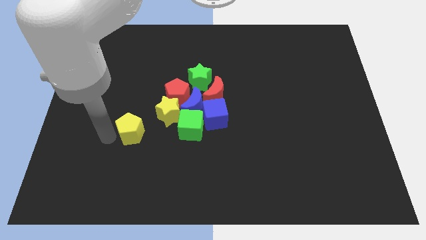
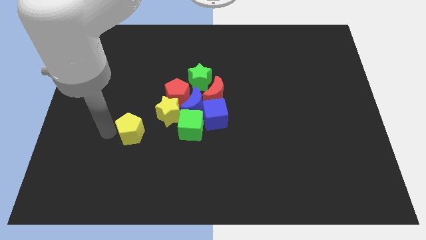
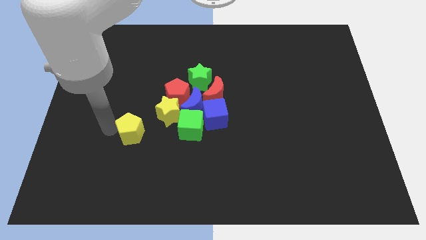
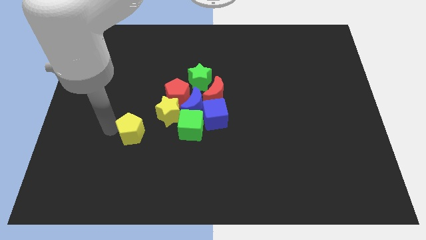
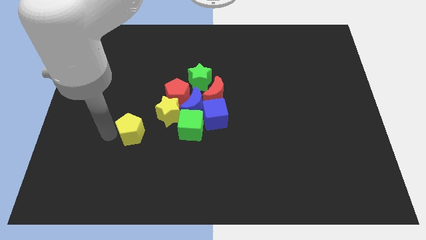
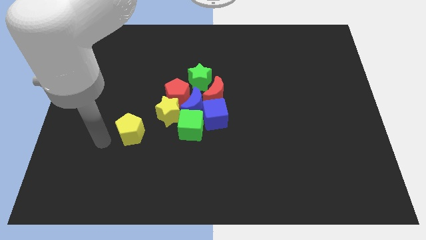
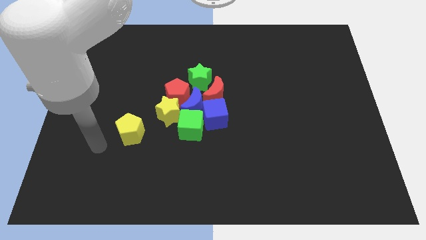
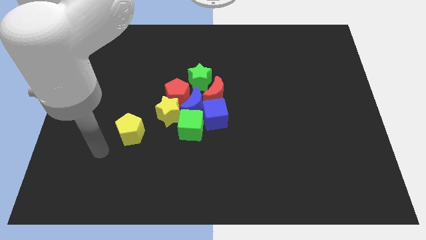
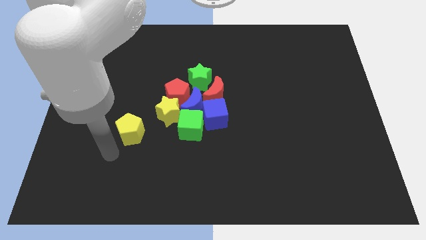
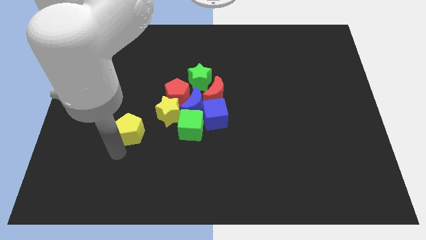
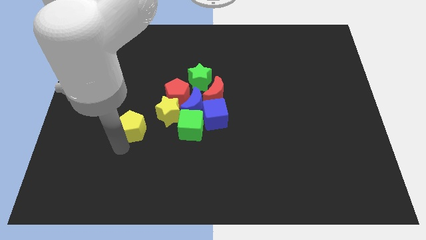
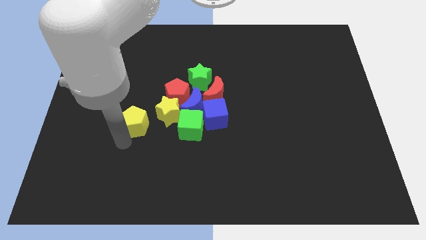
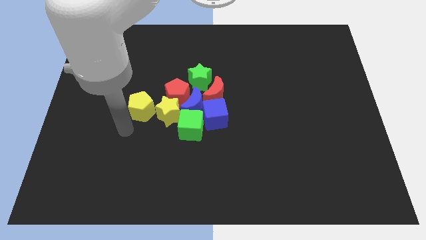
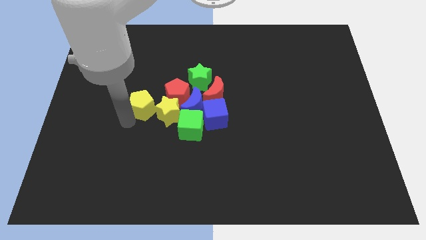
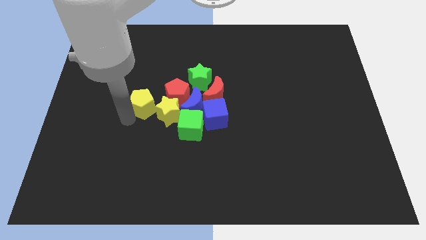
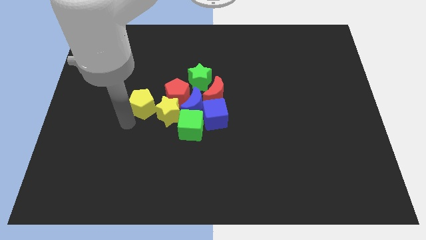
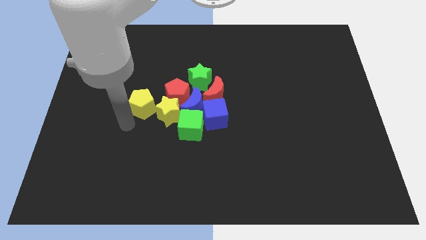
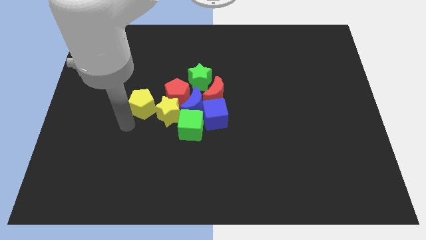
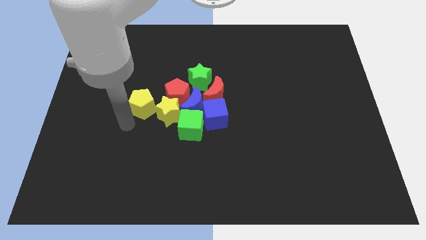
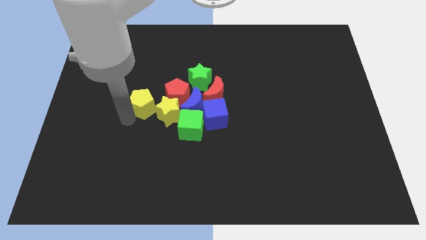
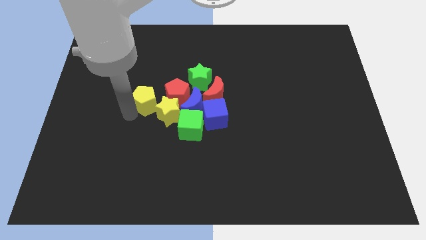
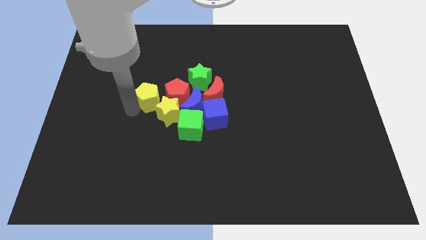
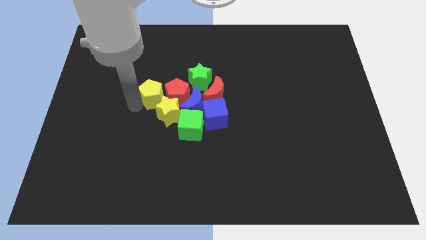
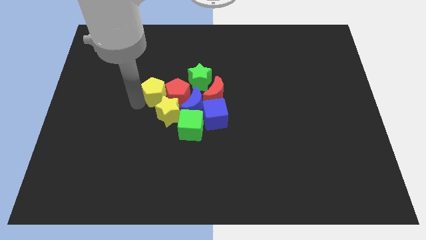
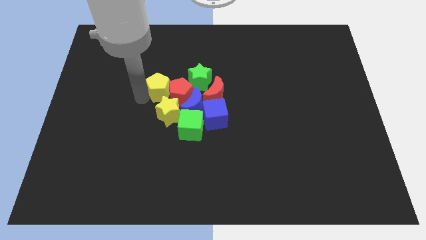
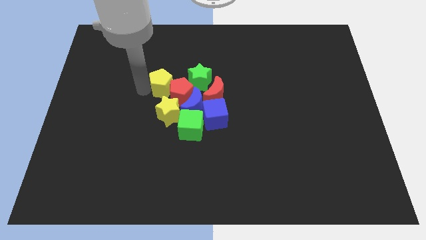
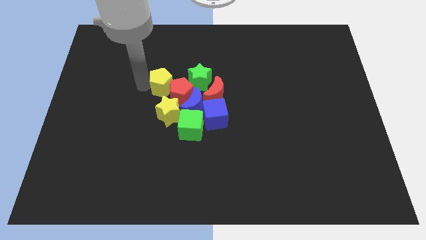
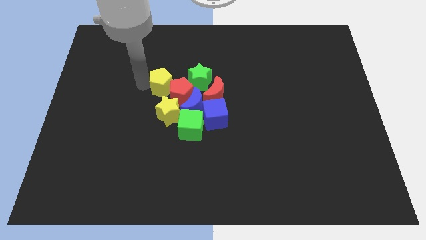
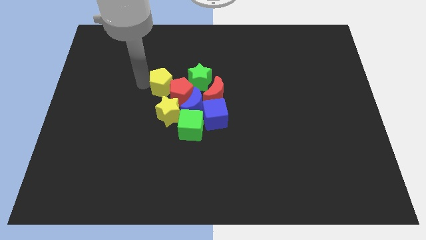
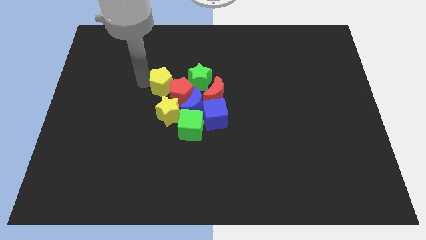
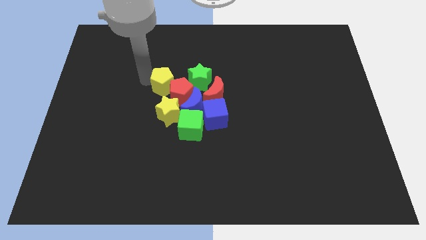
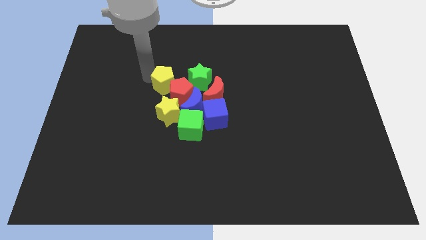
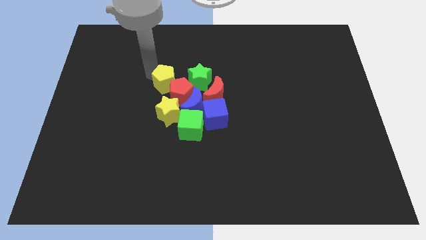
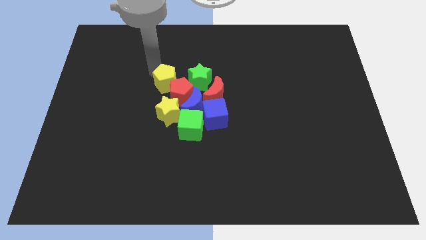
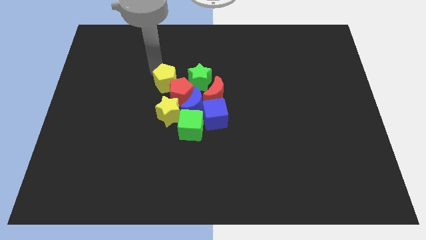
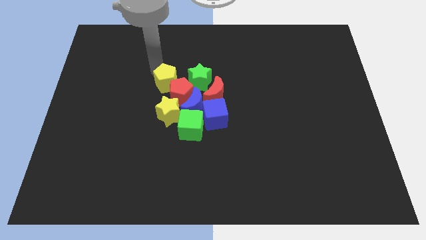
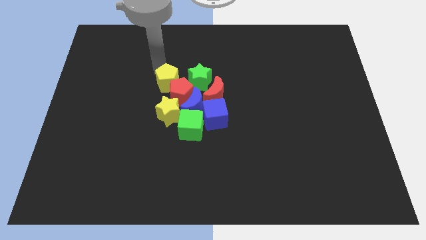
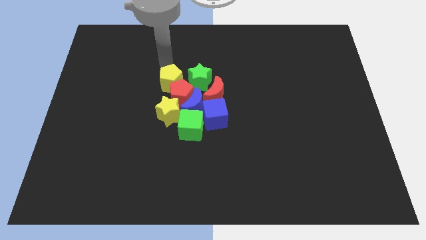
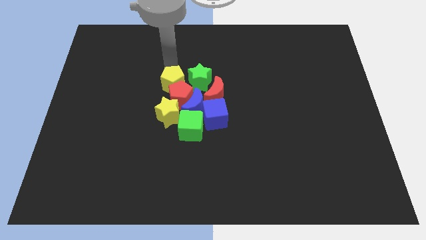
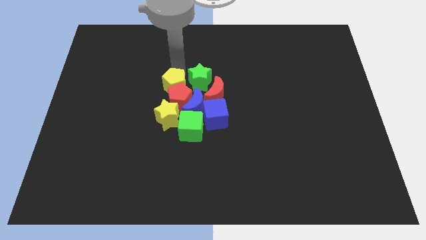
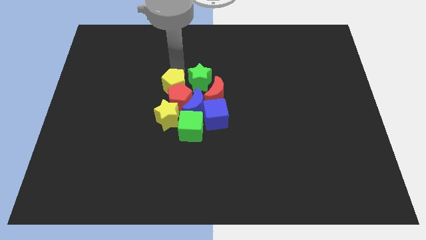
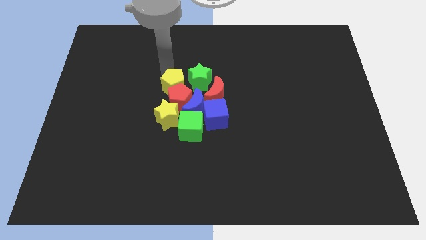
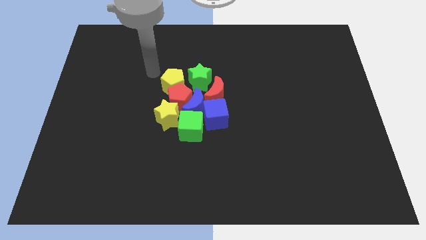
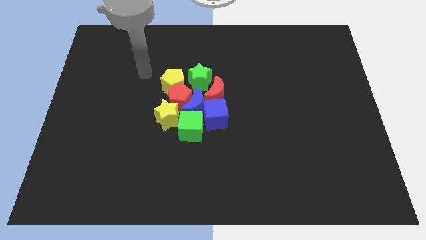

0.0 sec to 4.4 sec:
place the yellow pentagon above the red pentagon

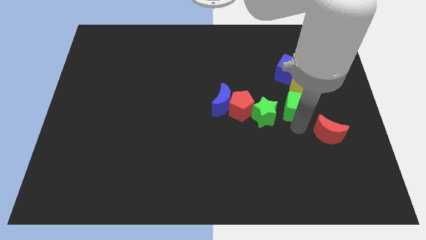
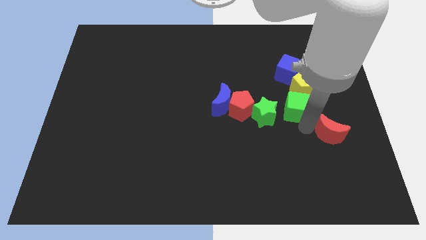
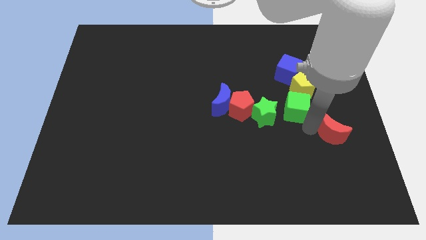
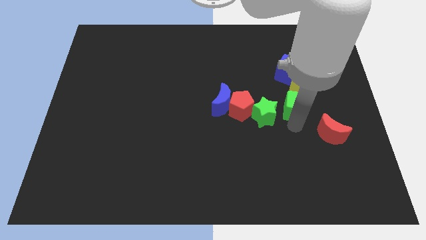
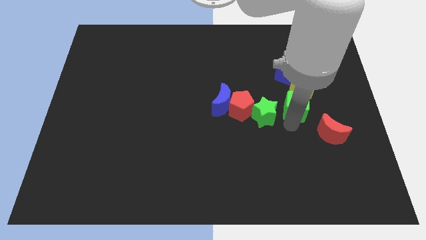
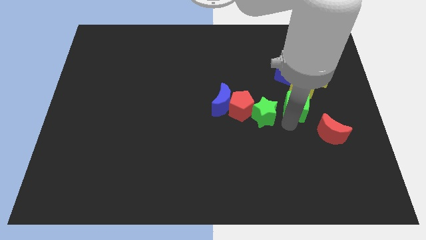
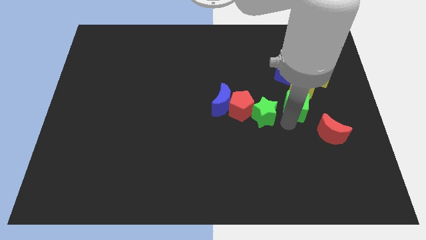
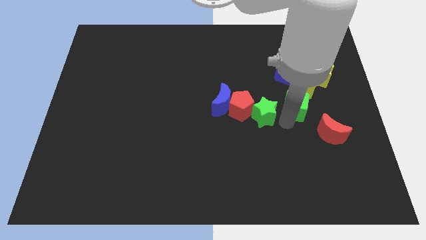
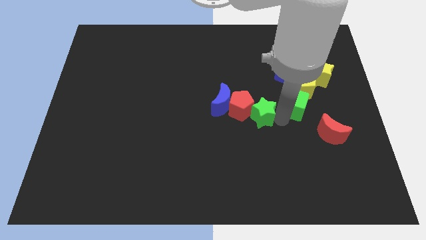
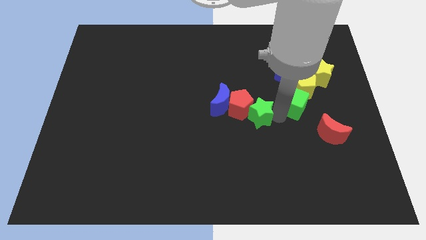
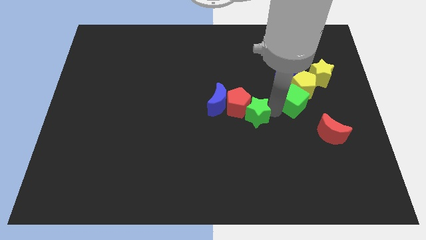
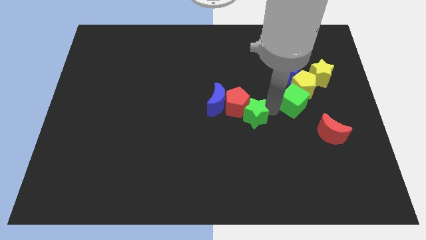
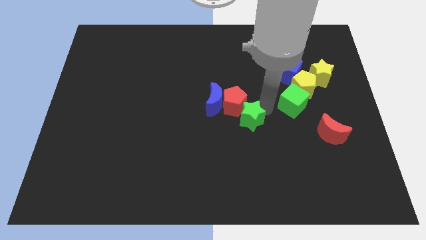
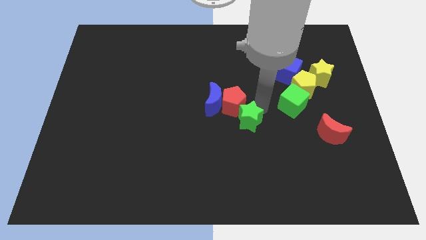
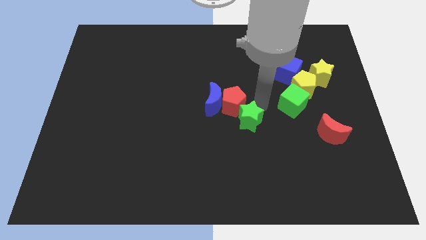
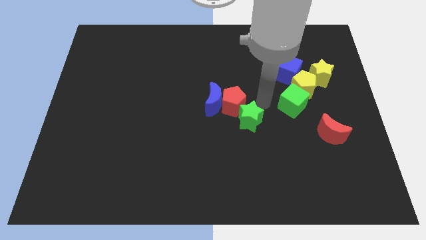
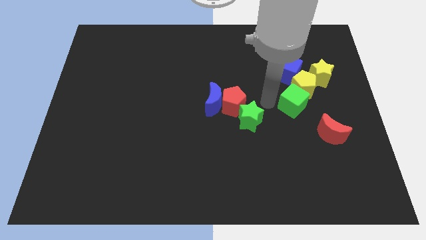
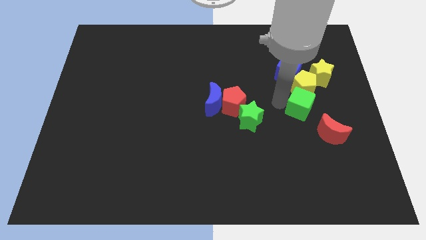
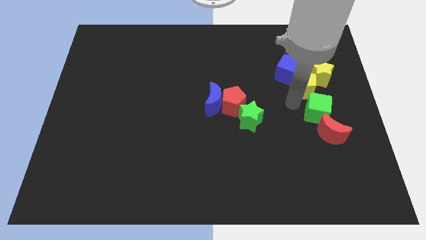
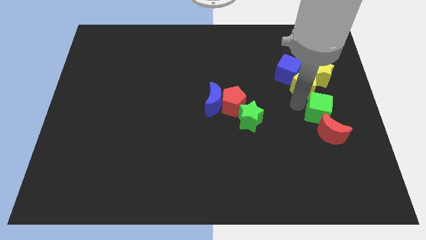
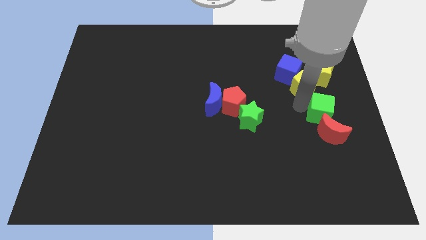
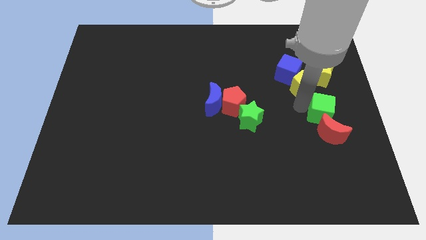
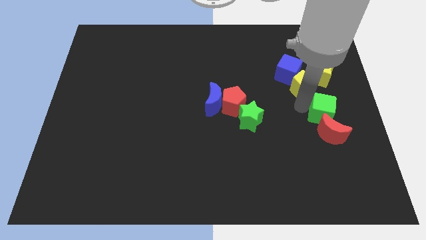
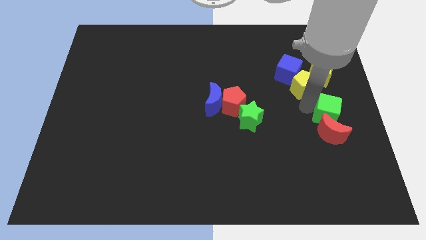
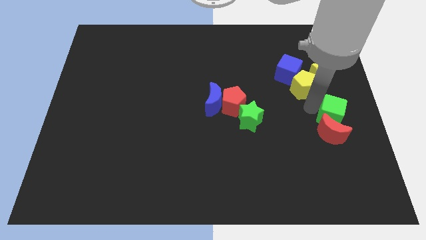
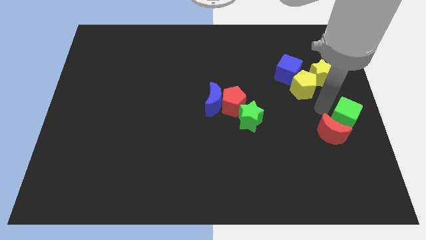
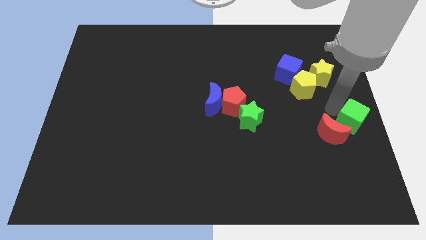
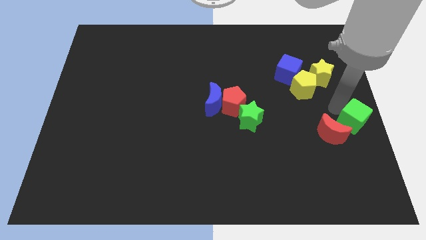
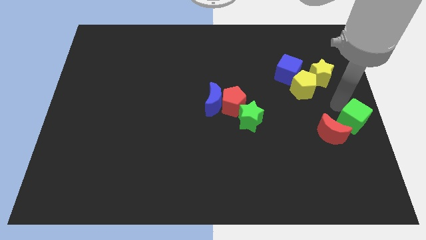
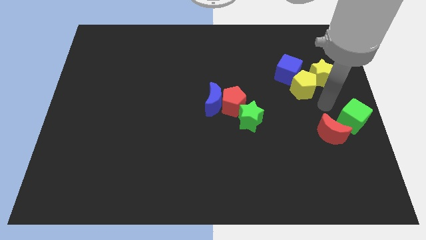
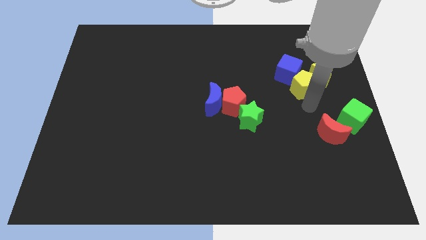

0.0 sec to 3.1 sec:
move the the green blocks away from each other

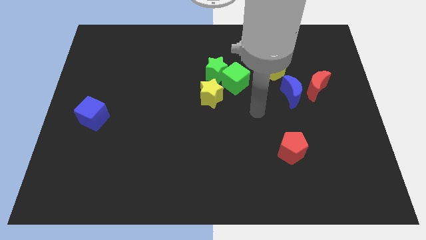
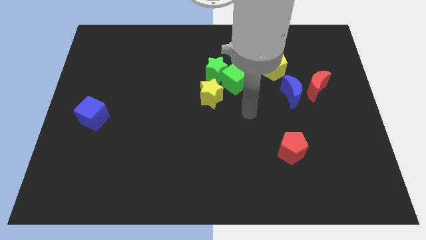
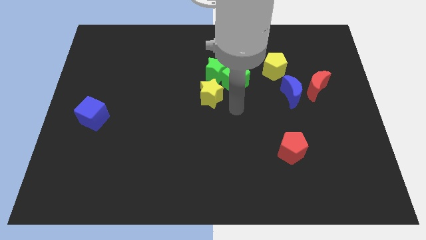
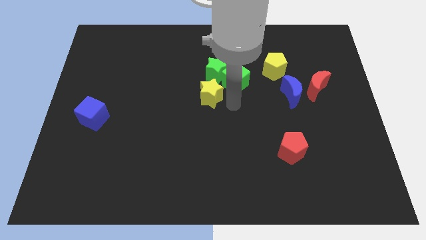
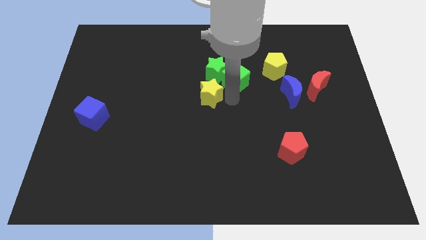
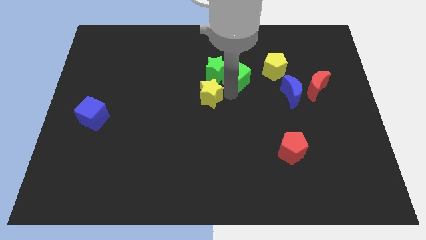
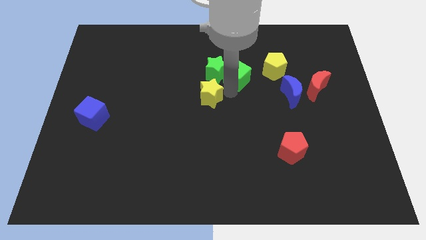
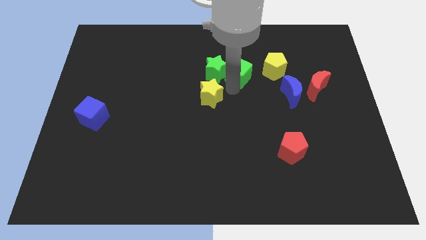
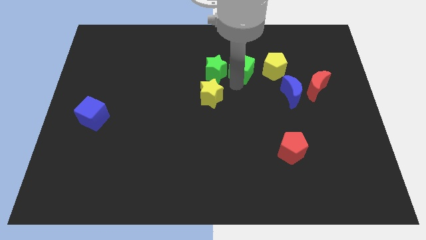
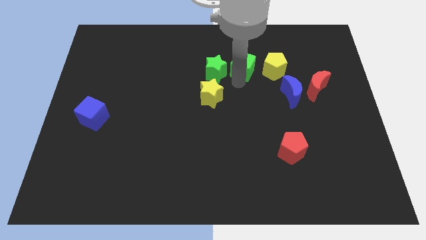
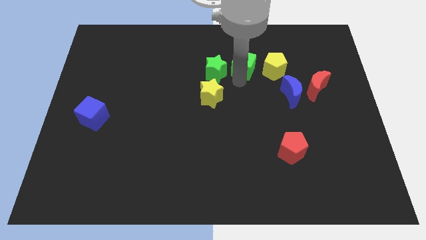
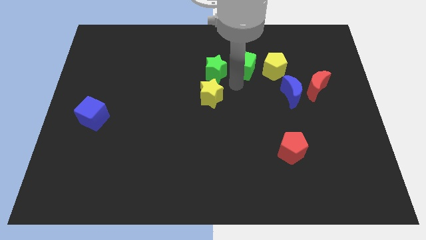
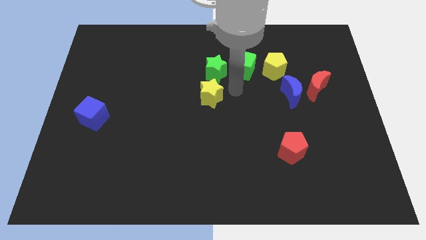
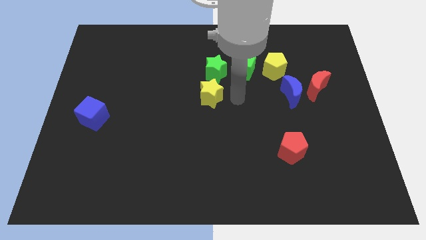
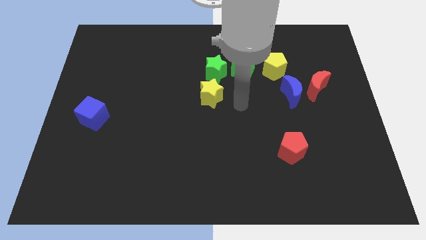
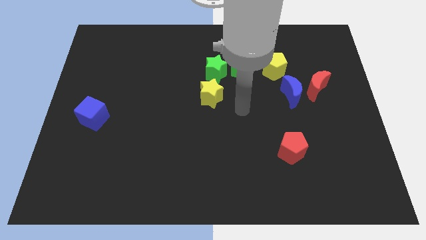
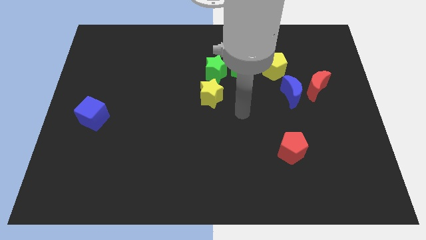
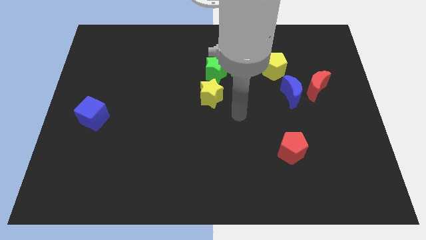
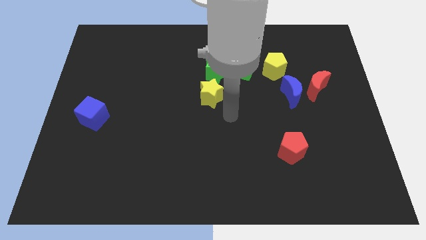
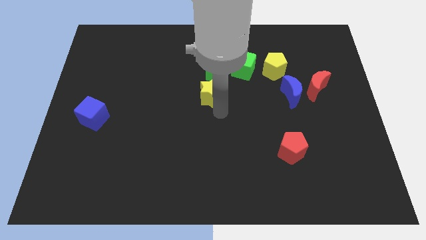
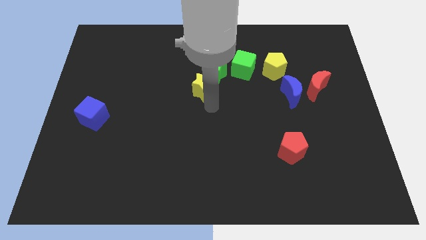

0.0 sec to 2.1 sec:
separate green cube and yellow star diagonally
